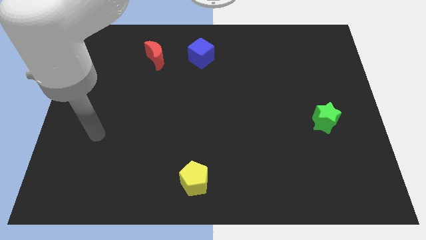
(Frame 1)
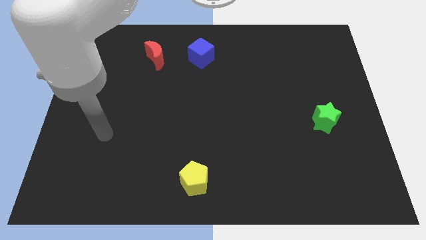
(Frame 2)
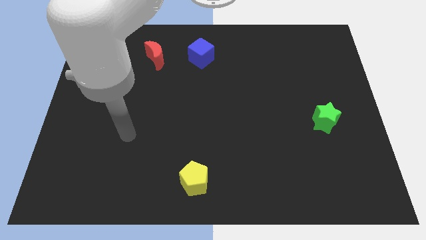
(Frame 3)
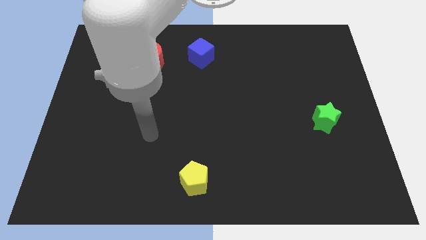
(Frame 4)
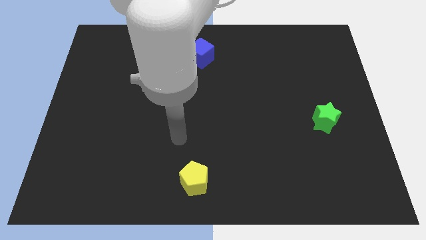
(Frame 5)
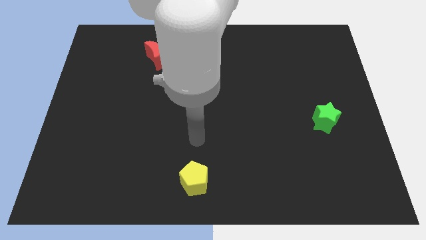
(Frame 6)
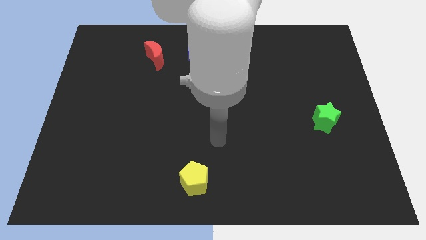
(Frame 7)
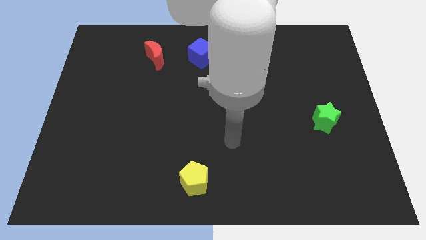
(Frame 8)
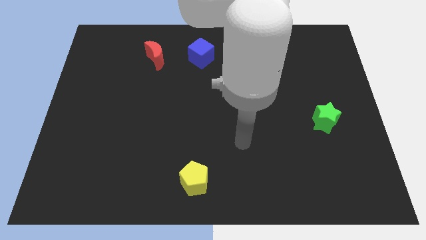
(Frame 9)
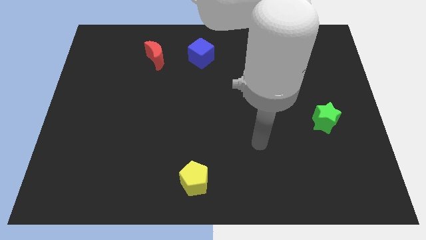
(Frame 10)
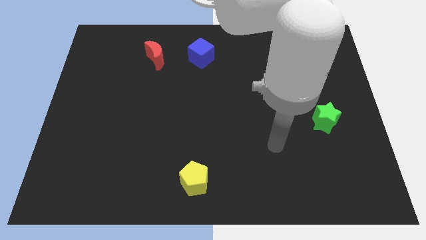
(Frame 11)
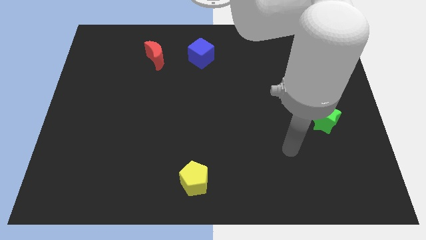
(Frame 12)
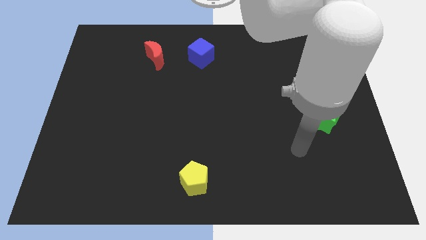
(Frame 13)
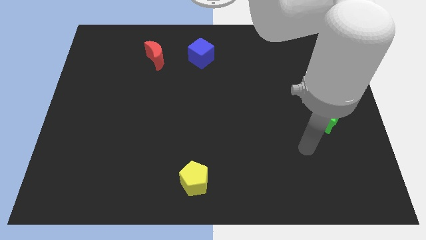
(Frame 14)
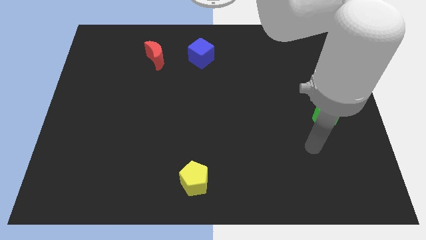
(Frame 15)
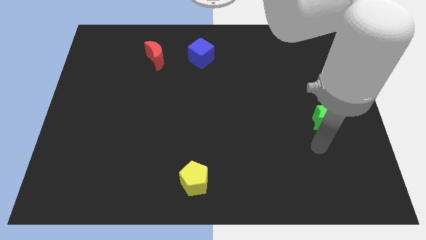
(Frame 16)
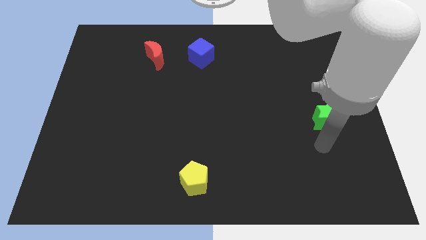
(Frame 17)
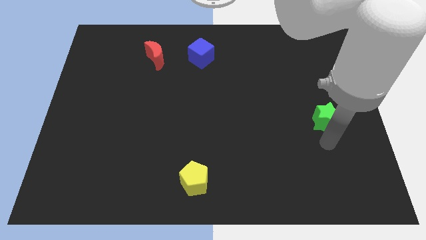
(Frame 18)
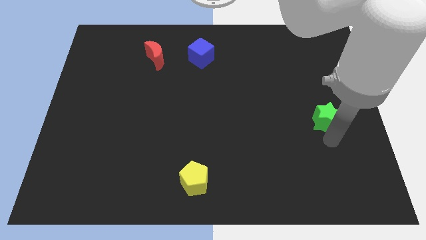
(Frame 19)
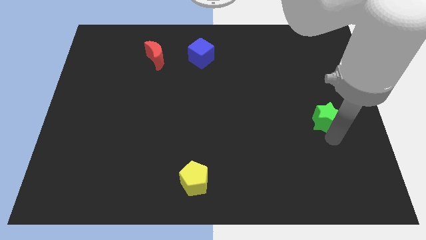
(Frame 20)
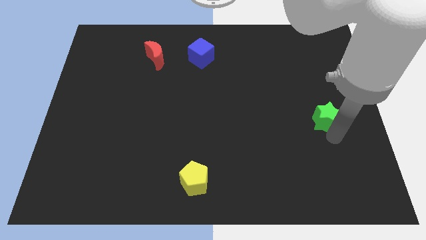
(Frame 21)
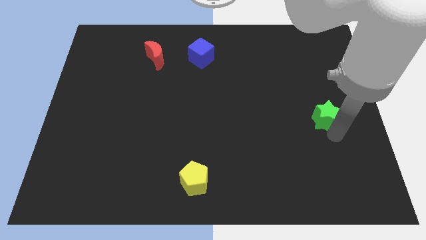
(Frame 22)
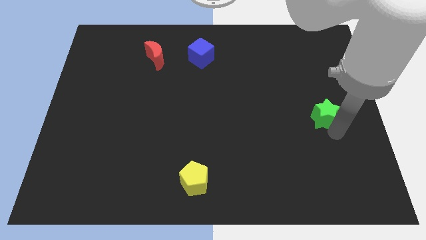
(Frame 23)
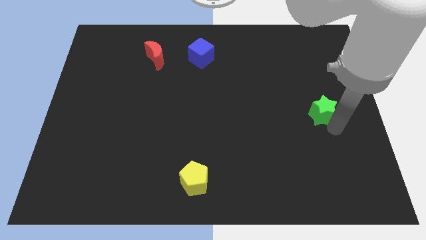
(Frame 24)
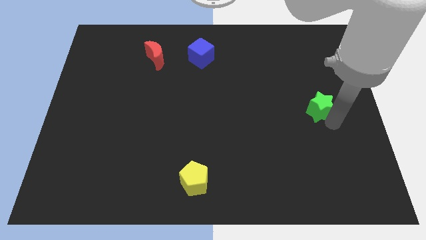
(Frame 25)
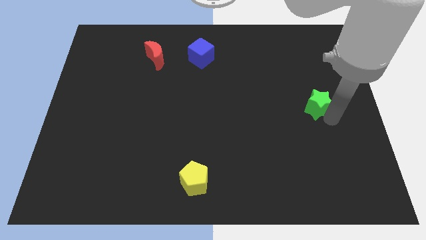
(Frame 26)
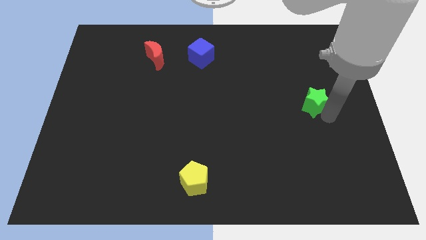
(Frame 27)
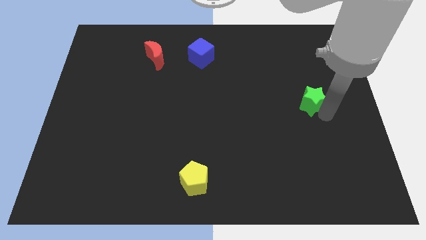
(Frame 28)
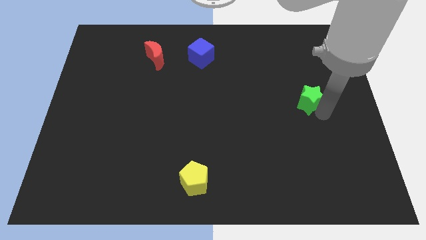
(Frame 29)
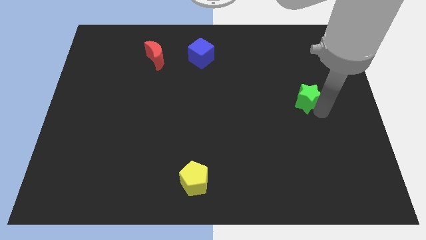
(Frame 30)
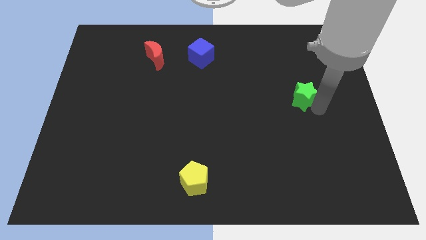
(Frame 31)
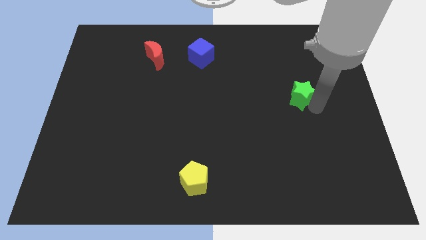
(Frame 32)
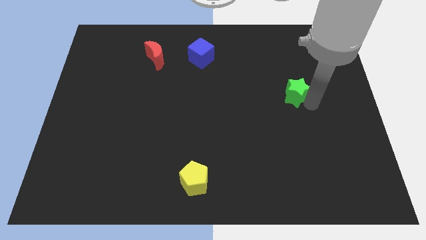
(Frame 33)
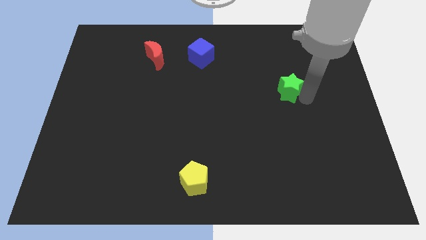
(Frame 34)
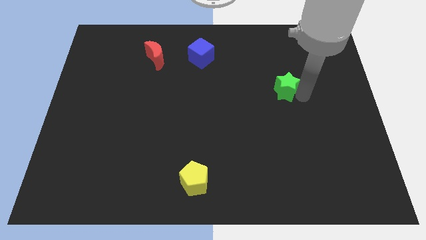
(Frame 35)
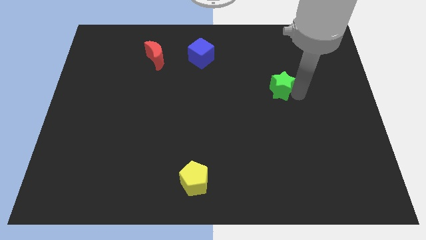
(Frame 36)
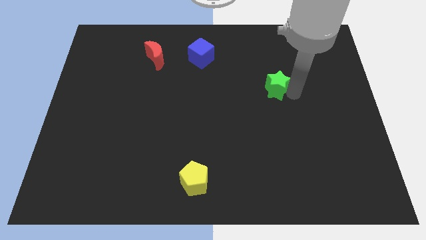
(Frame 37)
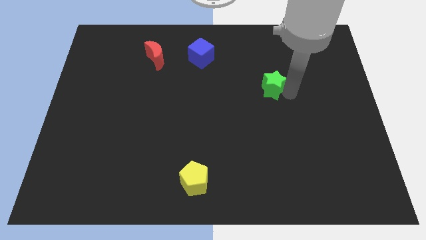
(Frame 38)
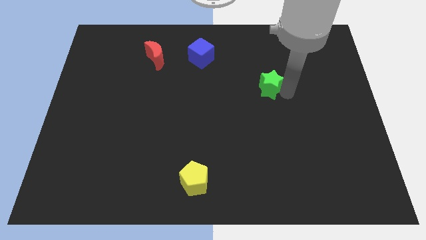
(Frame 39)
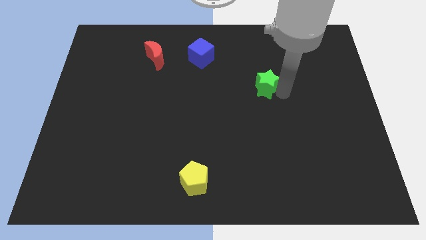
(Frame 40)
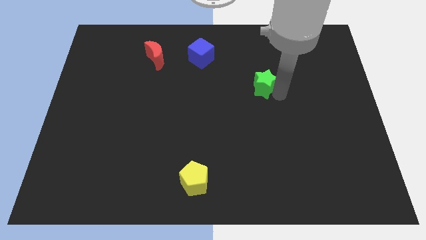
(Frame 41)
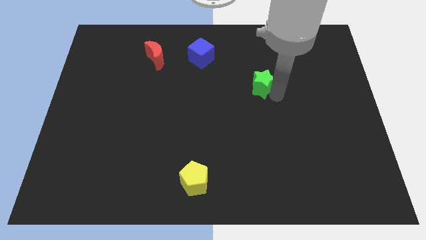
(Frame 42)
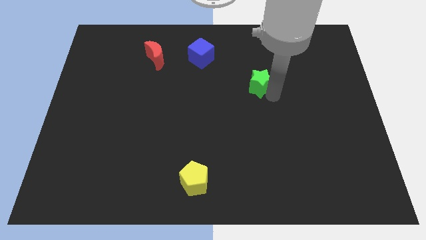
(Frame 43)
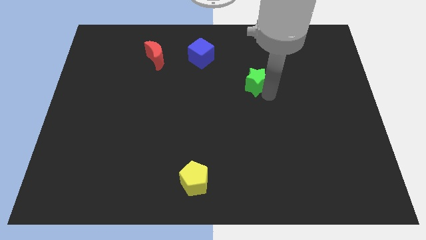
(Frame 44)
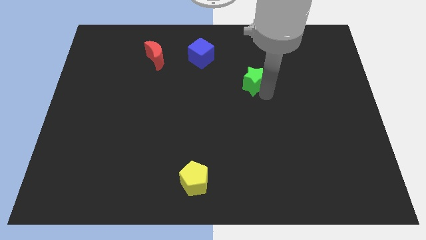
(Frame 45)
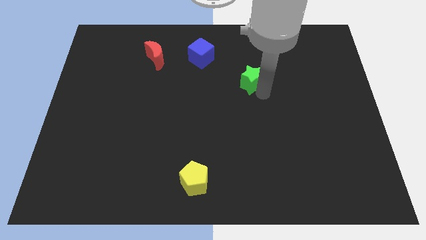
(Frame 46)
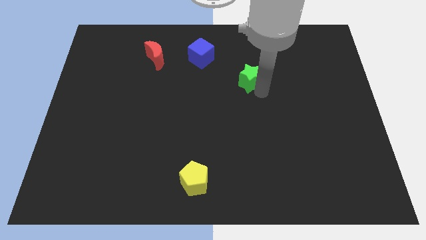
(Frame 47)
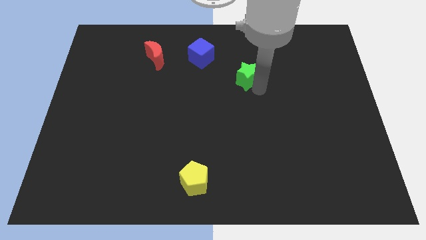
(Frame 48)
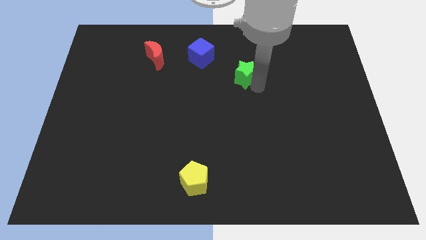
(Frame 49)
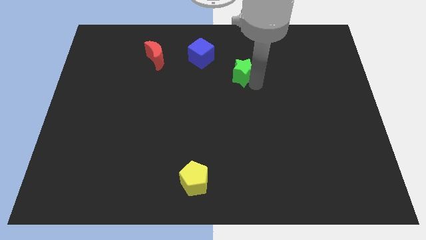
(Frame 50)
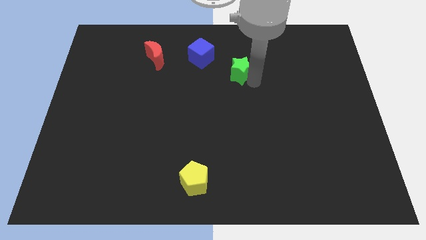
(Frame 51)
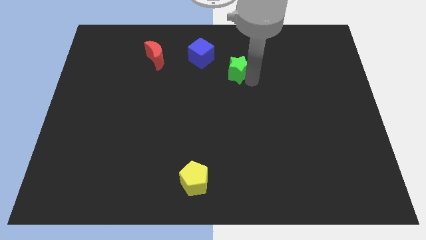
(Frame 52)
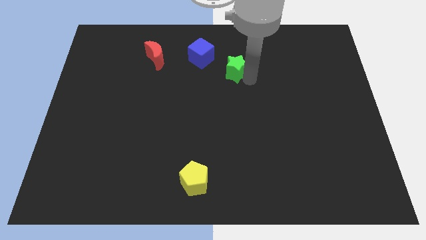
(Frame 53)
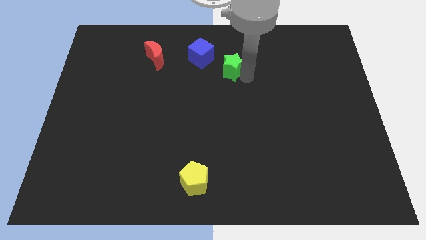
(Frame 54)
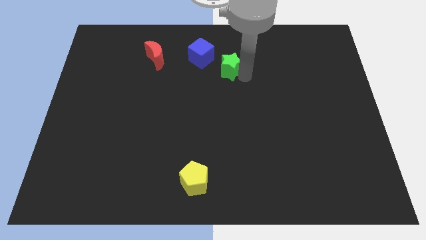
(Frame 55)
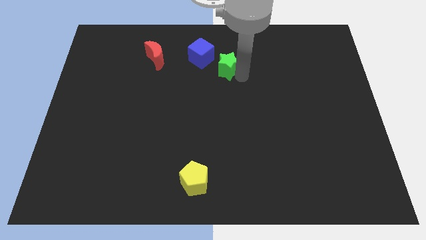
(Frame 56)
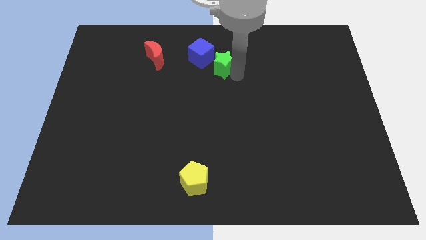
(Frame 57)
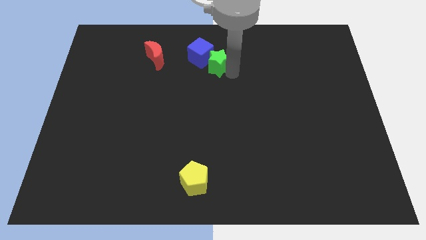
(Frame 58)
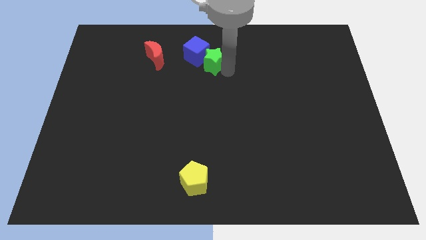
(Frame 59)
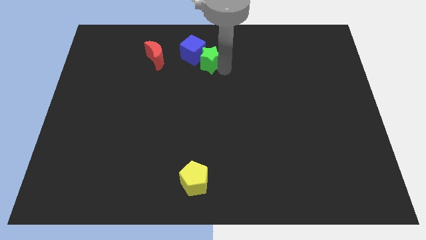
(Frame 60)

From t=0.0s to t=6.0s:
move the star towards the blue block

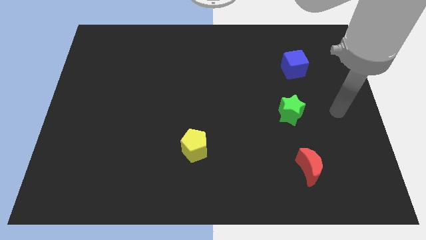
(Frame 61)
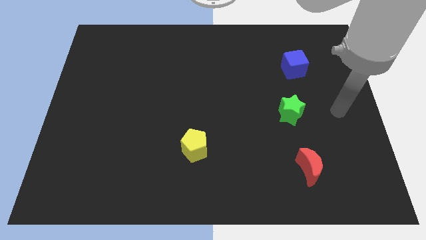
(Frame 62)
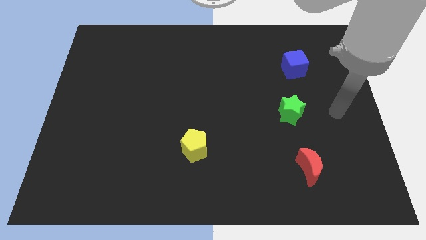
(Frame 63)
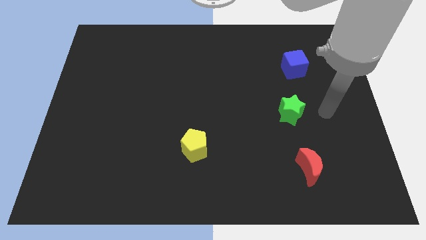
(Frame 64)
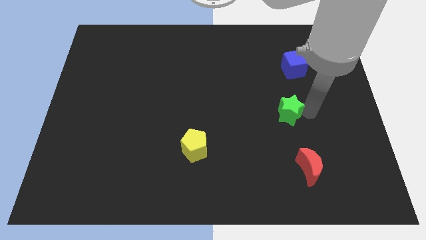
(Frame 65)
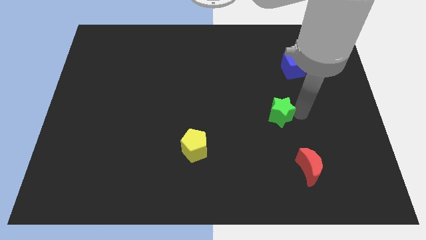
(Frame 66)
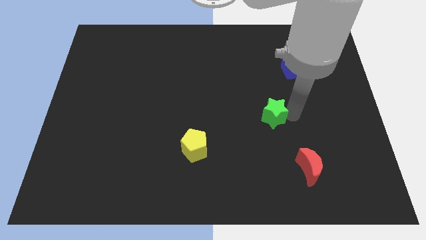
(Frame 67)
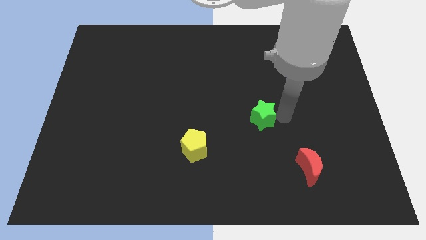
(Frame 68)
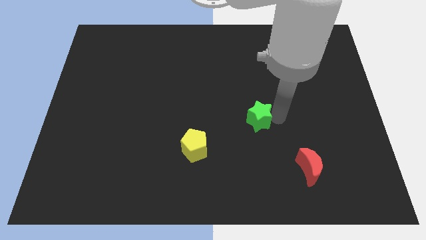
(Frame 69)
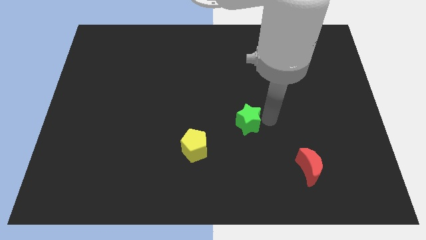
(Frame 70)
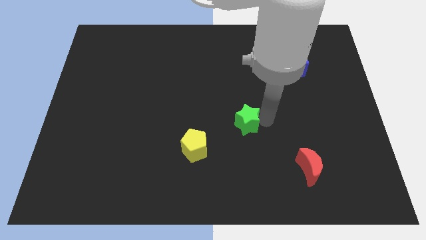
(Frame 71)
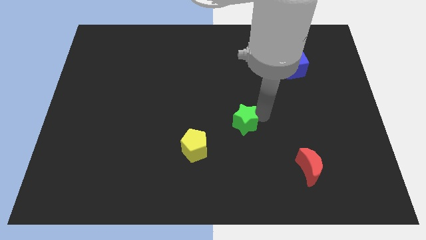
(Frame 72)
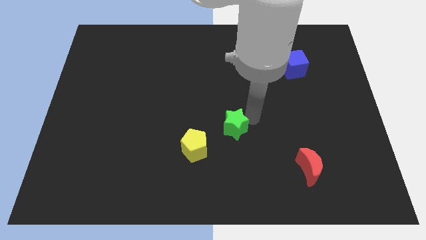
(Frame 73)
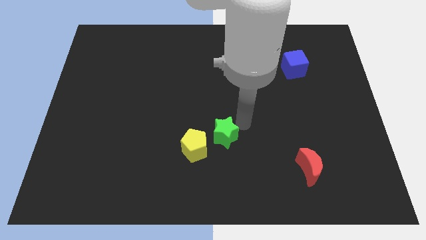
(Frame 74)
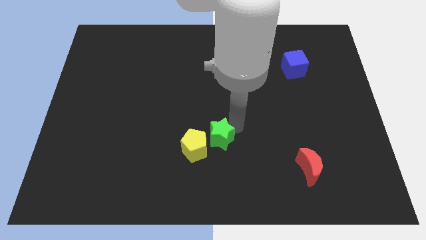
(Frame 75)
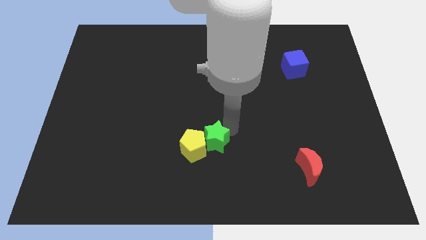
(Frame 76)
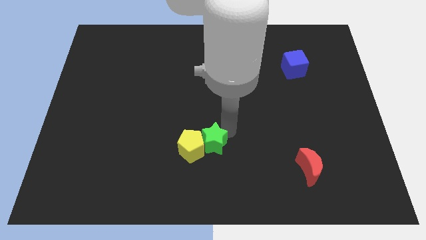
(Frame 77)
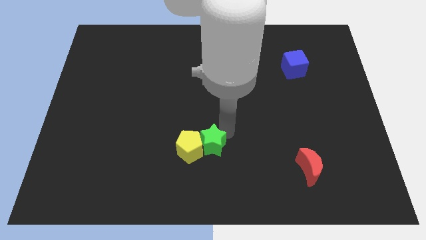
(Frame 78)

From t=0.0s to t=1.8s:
move the green star to the yellow block

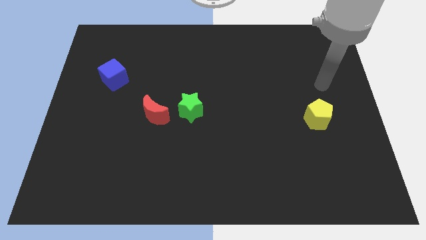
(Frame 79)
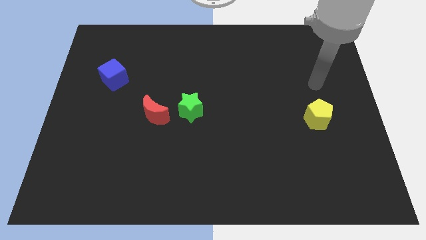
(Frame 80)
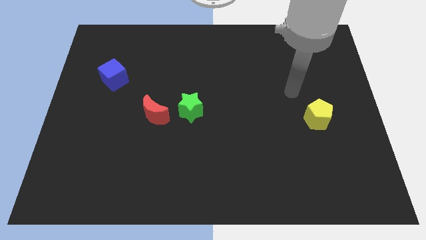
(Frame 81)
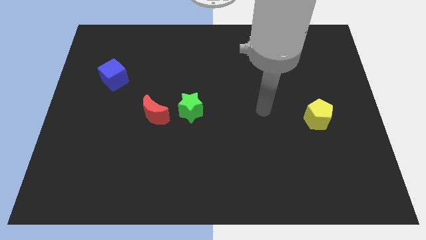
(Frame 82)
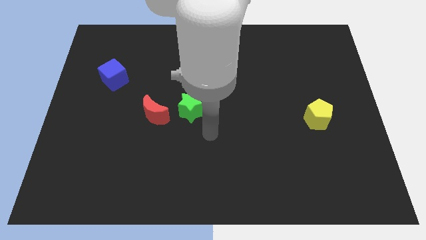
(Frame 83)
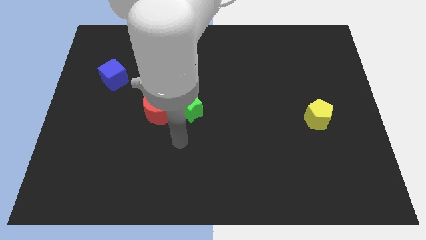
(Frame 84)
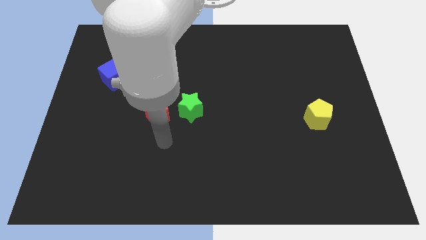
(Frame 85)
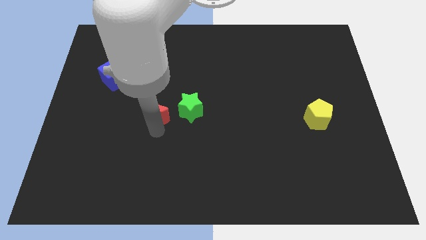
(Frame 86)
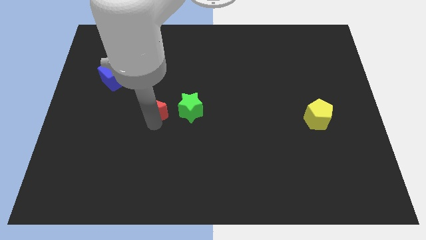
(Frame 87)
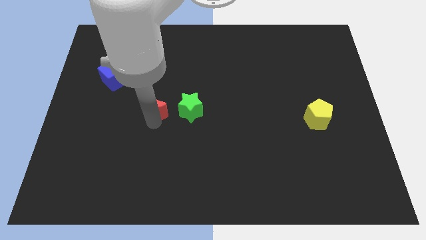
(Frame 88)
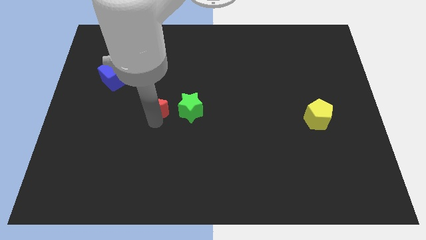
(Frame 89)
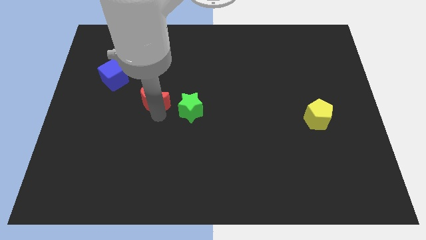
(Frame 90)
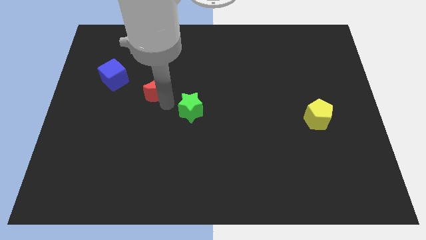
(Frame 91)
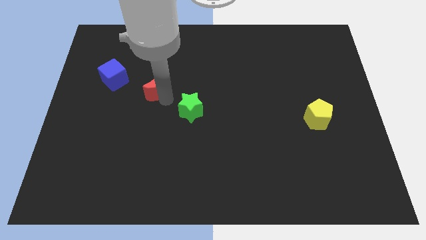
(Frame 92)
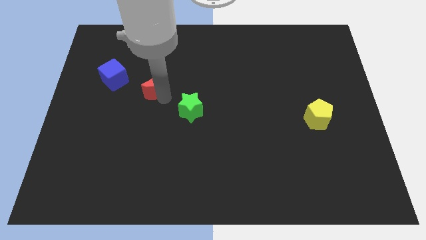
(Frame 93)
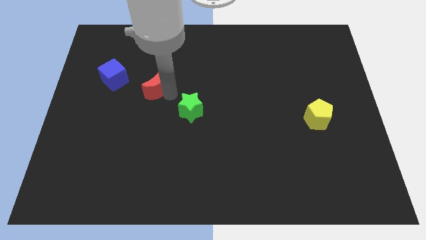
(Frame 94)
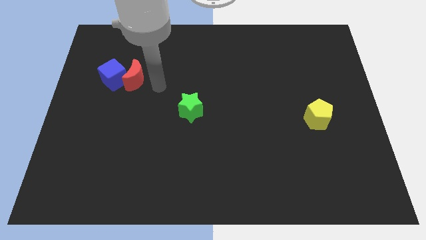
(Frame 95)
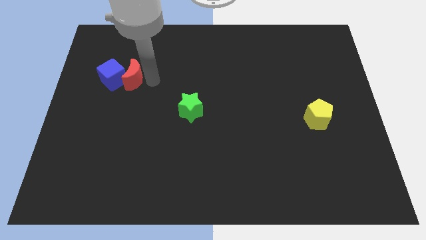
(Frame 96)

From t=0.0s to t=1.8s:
push the moon close to the blue block
